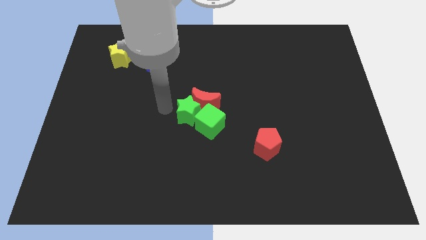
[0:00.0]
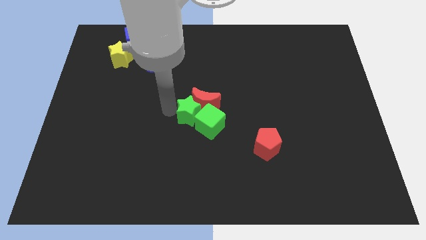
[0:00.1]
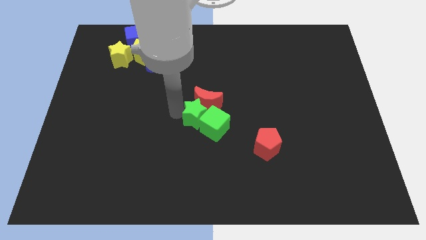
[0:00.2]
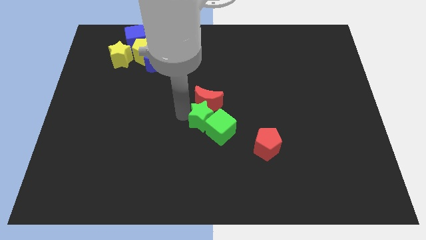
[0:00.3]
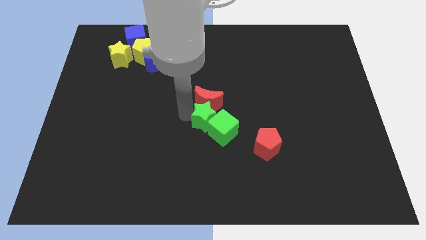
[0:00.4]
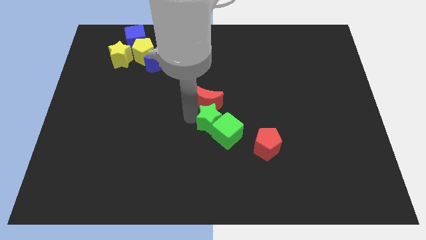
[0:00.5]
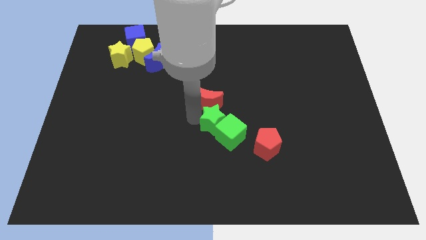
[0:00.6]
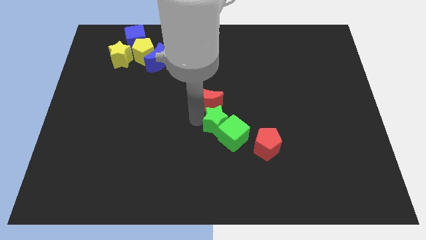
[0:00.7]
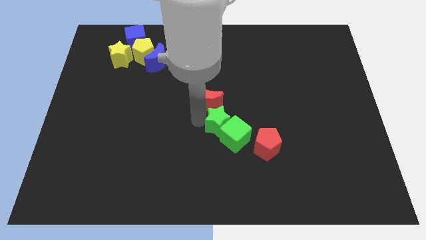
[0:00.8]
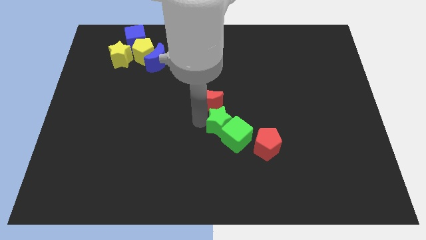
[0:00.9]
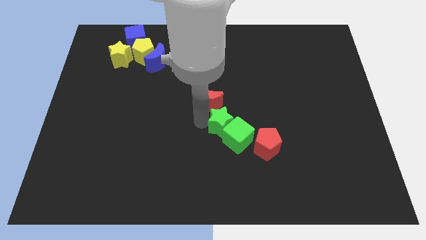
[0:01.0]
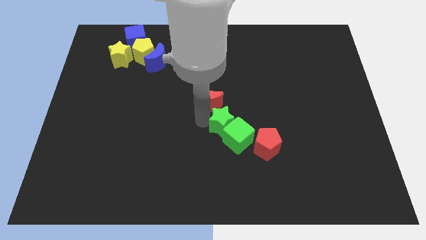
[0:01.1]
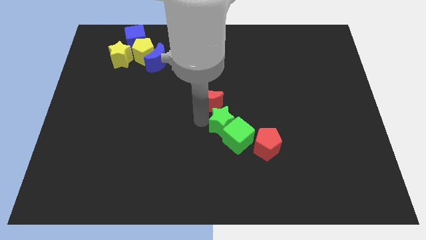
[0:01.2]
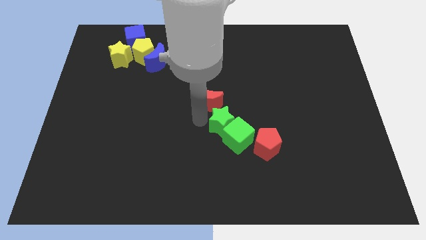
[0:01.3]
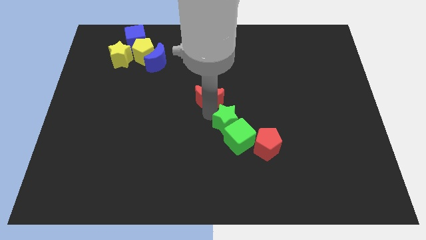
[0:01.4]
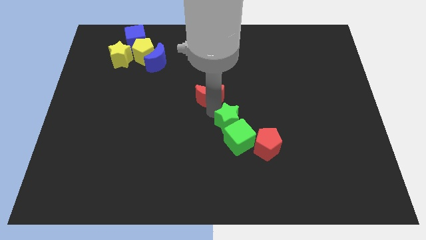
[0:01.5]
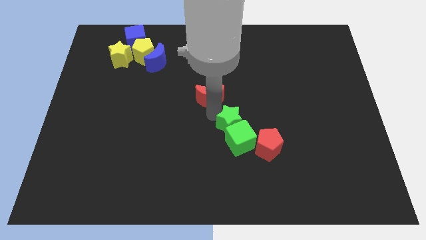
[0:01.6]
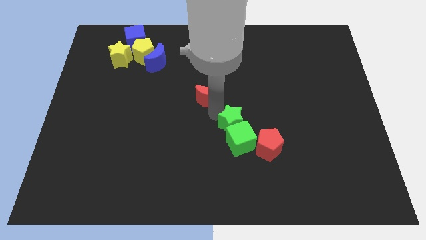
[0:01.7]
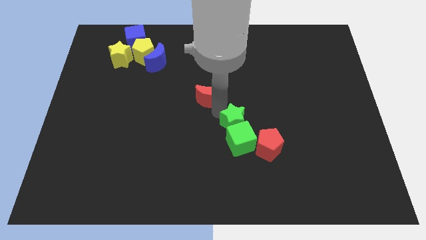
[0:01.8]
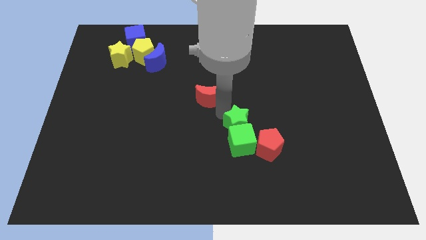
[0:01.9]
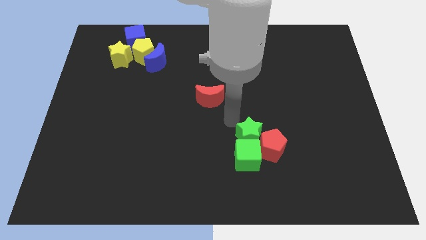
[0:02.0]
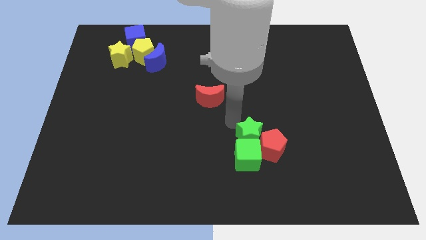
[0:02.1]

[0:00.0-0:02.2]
place the green blocks left to the red pentagon

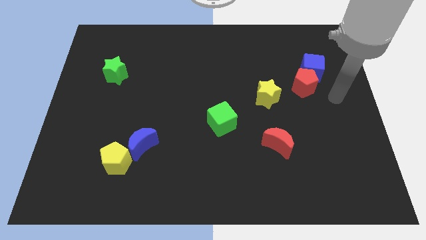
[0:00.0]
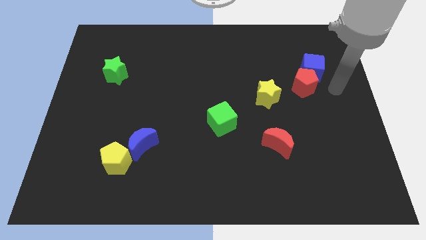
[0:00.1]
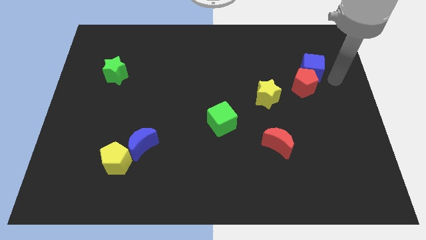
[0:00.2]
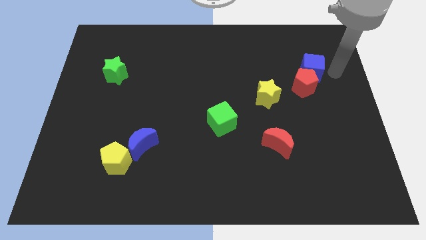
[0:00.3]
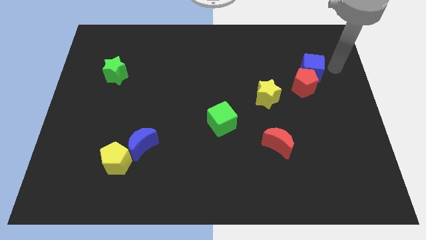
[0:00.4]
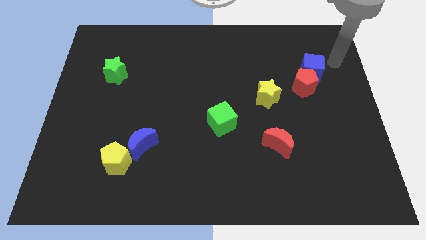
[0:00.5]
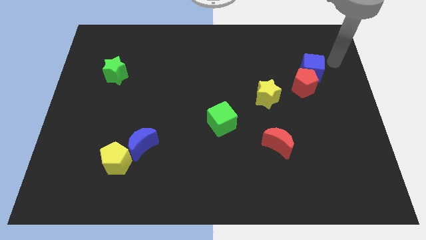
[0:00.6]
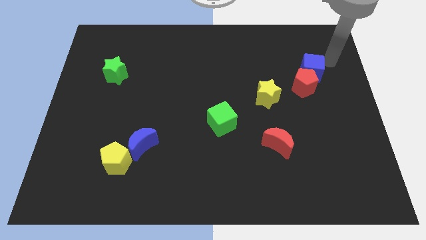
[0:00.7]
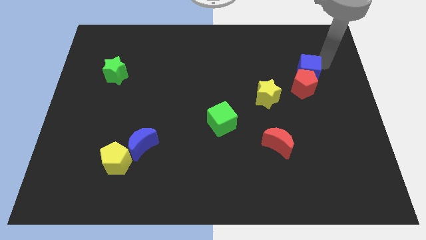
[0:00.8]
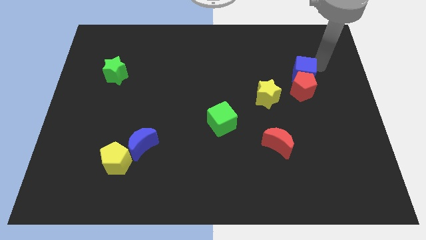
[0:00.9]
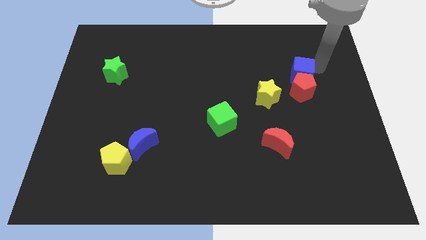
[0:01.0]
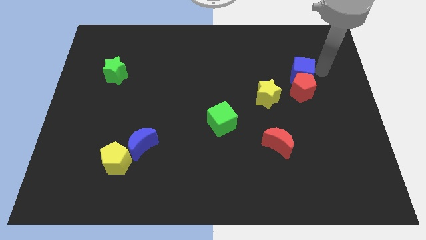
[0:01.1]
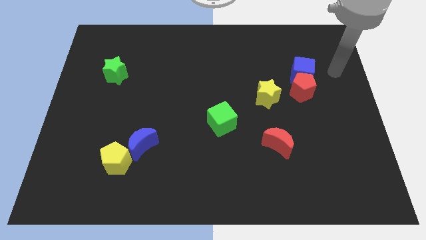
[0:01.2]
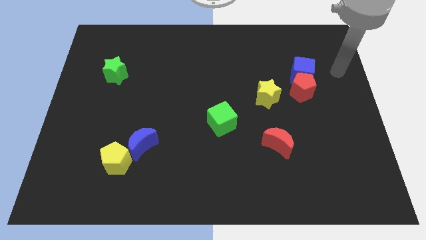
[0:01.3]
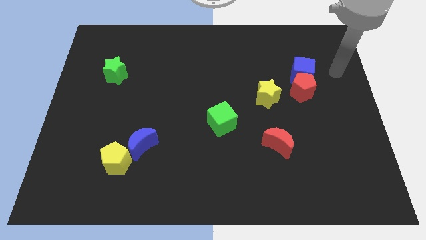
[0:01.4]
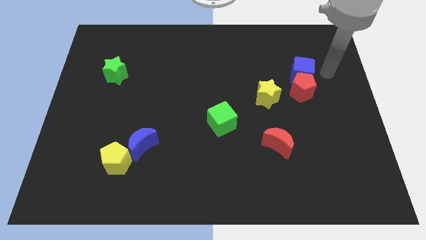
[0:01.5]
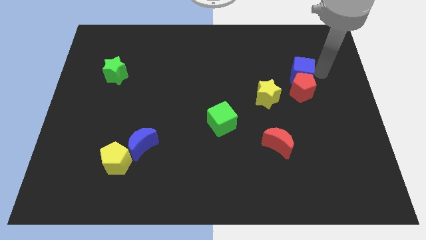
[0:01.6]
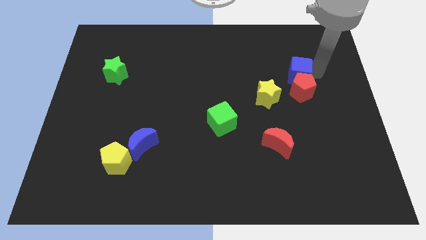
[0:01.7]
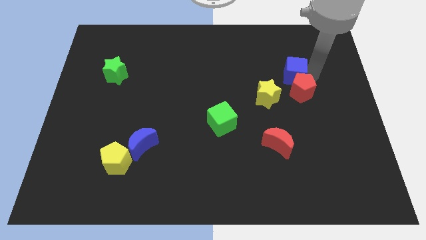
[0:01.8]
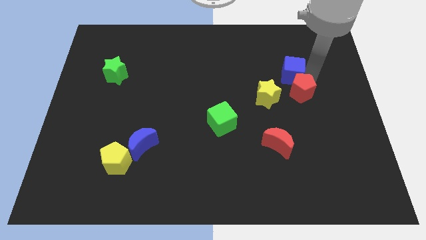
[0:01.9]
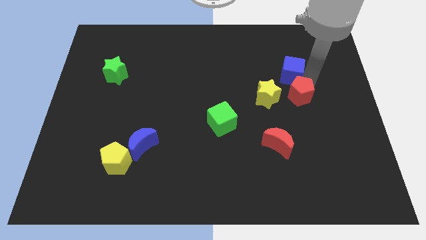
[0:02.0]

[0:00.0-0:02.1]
move the arm towards right side of the blue cube

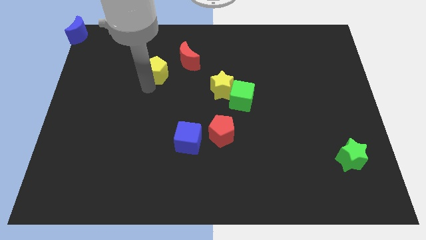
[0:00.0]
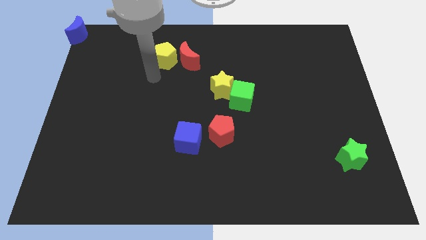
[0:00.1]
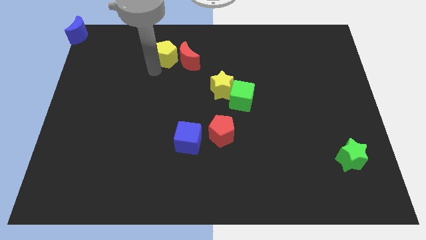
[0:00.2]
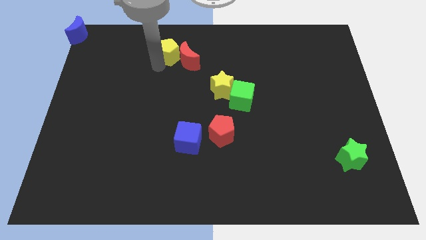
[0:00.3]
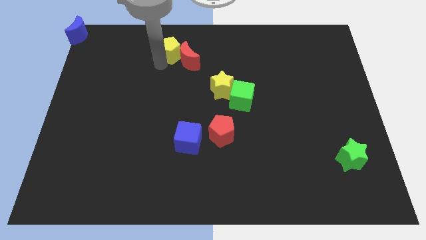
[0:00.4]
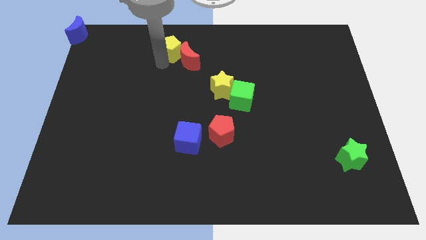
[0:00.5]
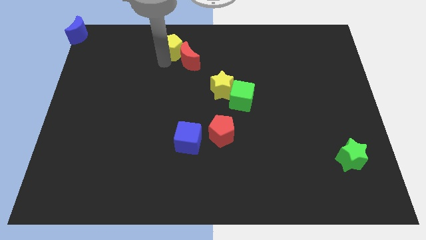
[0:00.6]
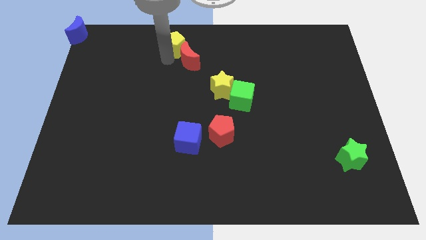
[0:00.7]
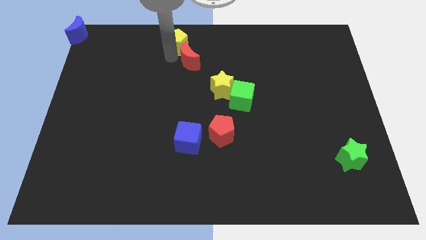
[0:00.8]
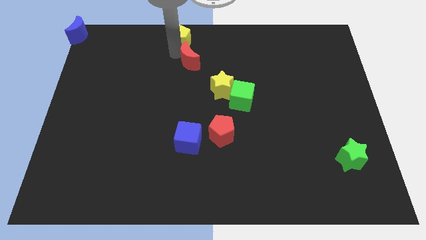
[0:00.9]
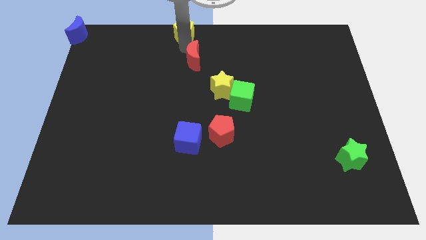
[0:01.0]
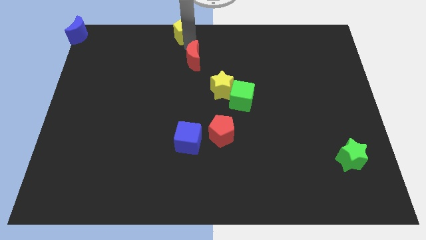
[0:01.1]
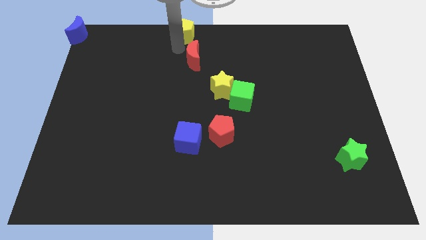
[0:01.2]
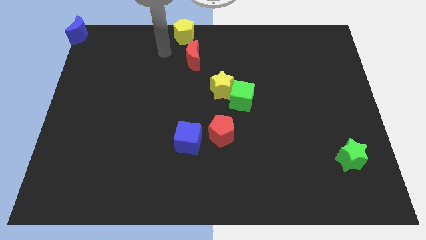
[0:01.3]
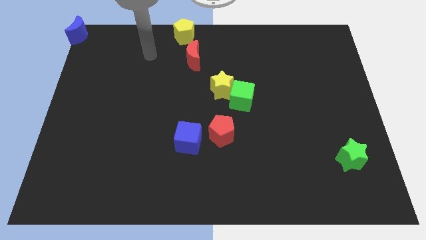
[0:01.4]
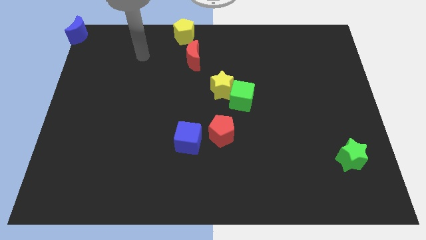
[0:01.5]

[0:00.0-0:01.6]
put the yellow pentagon at the top center of the board

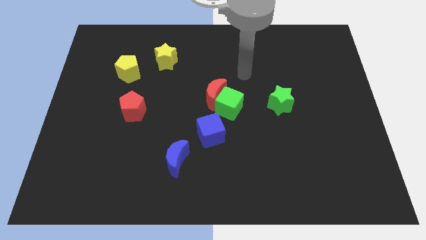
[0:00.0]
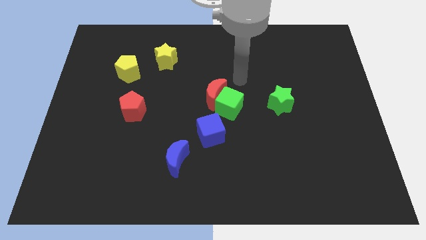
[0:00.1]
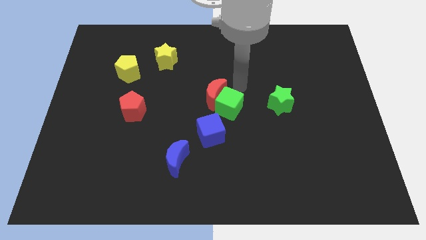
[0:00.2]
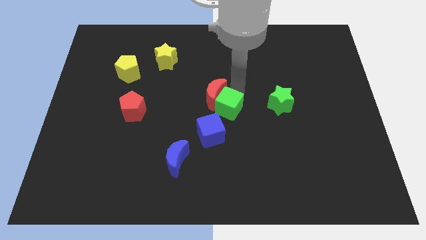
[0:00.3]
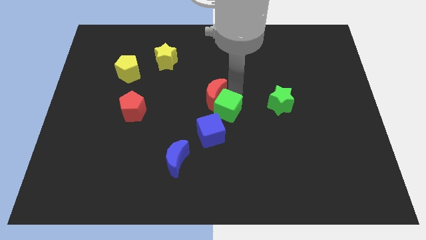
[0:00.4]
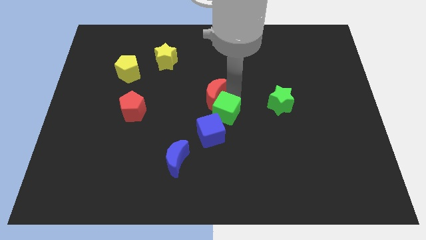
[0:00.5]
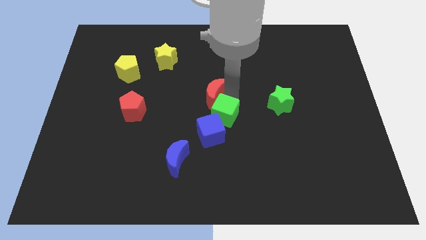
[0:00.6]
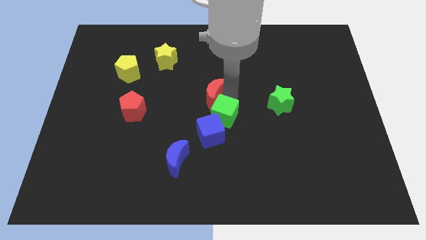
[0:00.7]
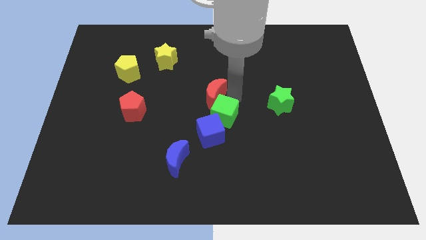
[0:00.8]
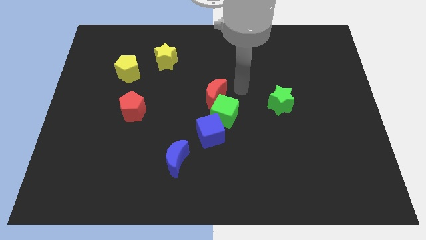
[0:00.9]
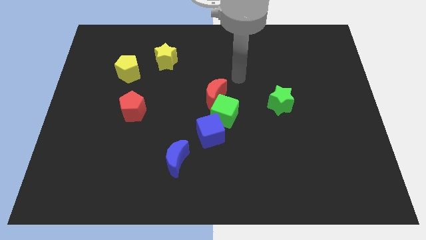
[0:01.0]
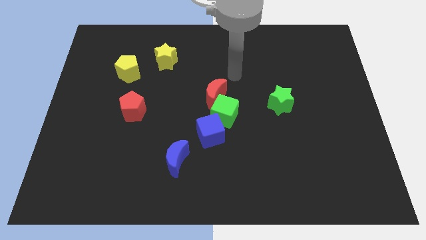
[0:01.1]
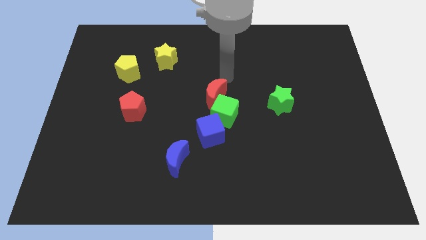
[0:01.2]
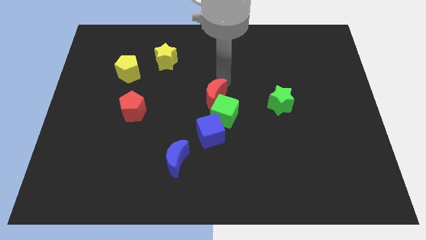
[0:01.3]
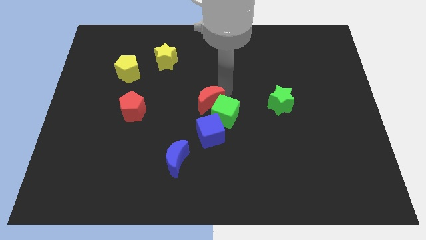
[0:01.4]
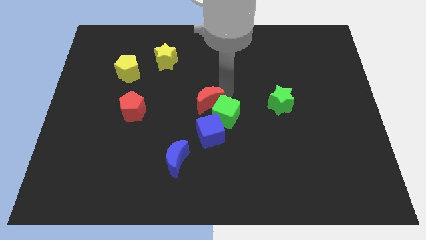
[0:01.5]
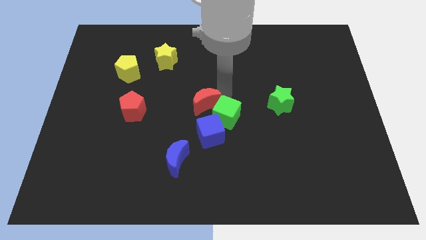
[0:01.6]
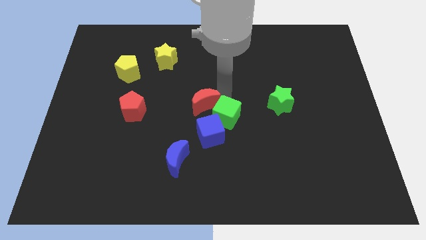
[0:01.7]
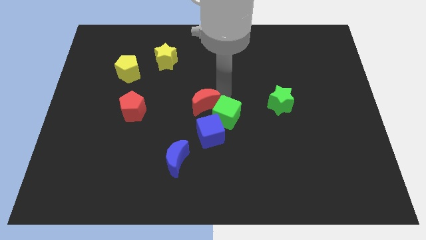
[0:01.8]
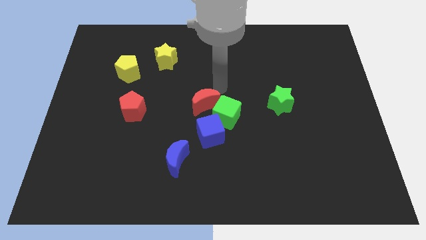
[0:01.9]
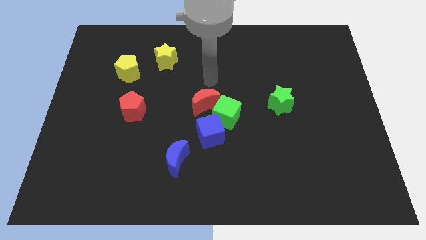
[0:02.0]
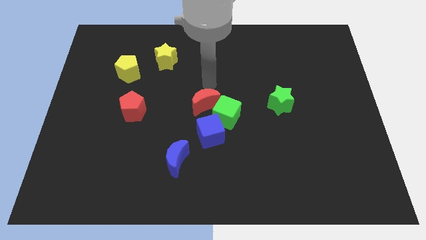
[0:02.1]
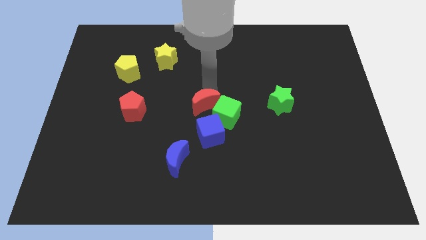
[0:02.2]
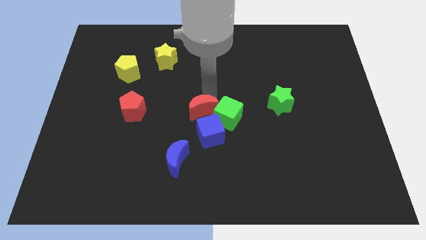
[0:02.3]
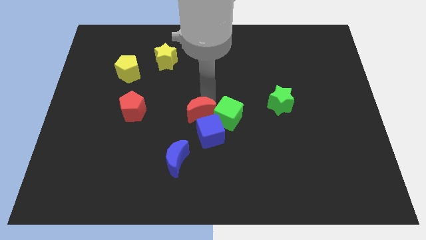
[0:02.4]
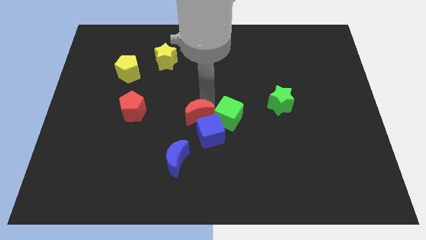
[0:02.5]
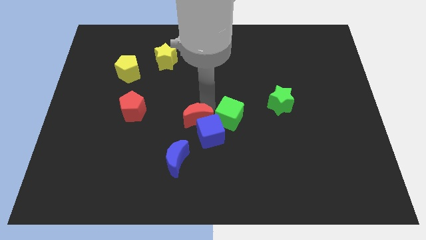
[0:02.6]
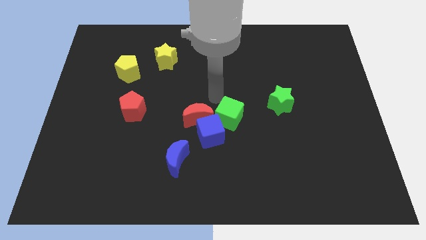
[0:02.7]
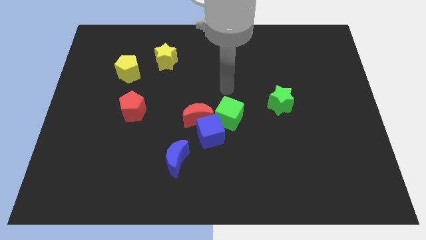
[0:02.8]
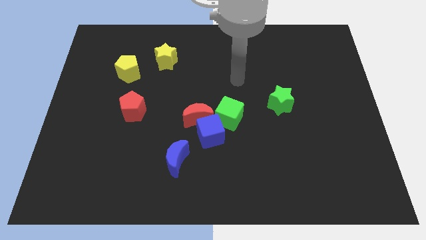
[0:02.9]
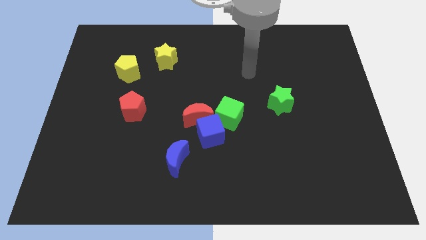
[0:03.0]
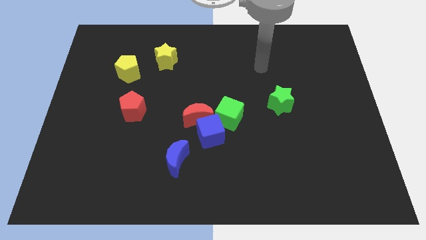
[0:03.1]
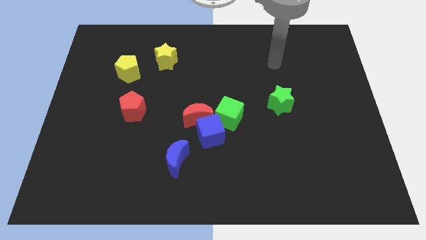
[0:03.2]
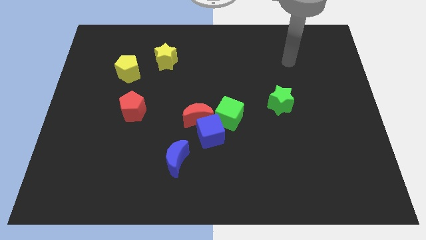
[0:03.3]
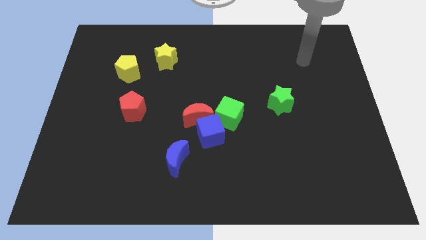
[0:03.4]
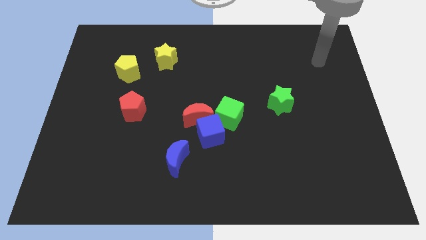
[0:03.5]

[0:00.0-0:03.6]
push the red moon and green cube into blue cube
